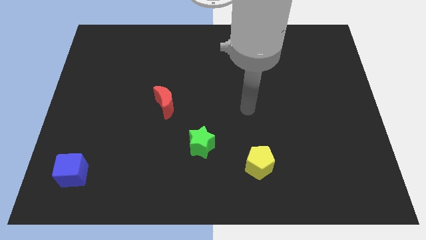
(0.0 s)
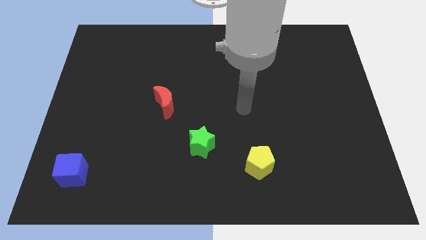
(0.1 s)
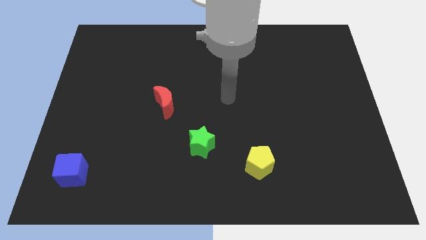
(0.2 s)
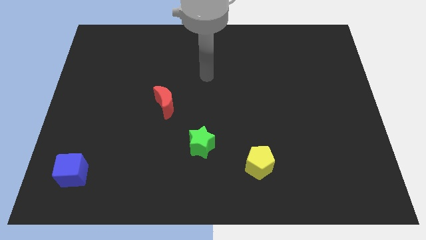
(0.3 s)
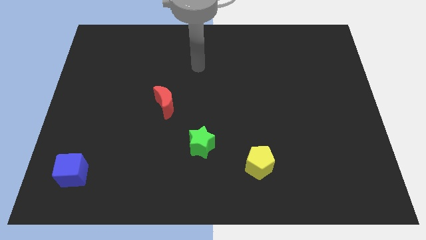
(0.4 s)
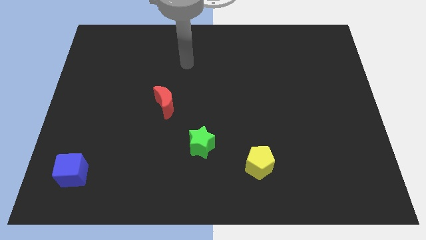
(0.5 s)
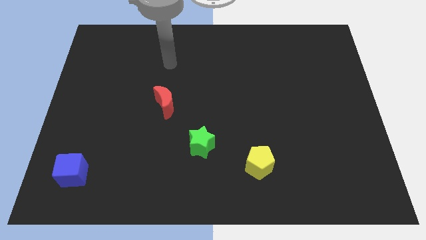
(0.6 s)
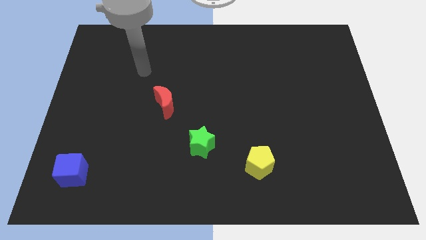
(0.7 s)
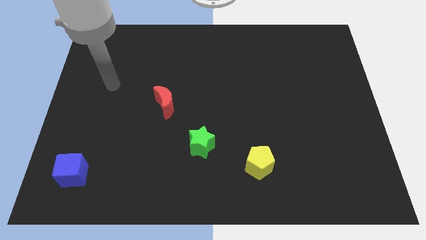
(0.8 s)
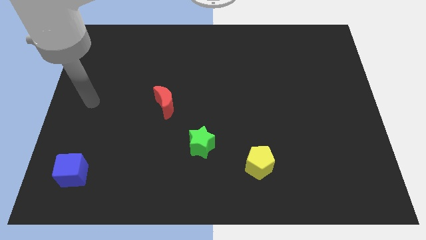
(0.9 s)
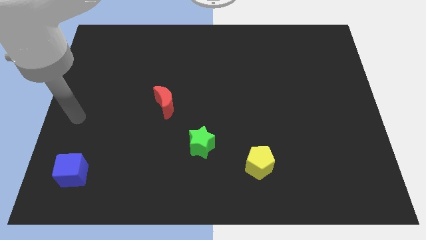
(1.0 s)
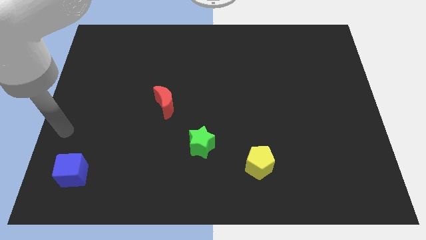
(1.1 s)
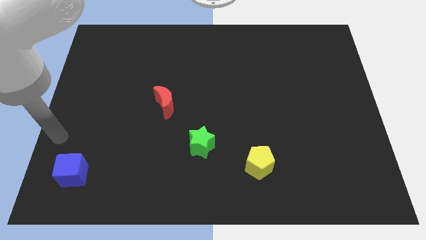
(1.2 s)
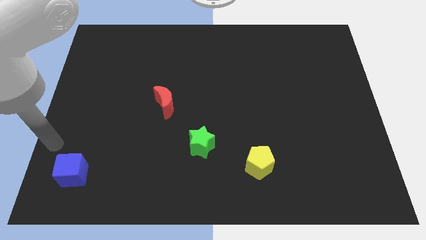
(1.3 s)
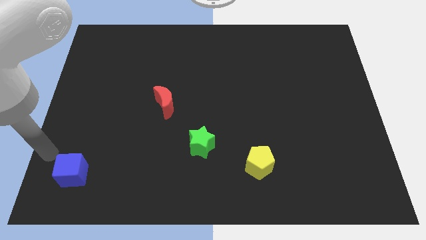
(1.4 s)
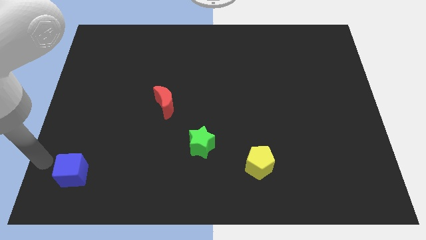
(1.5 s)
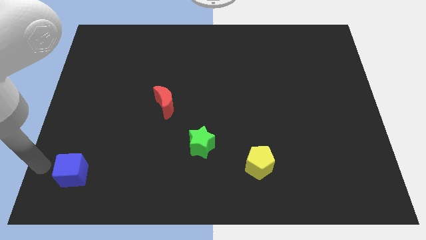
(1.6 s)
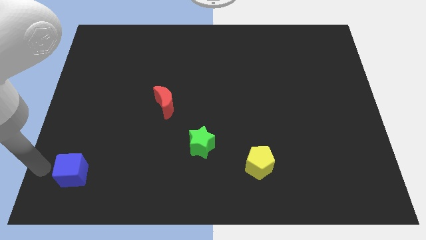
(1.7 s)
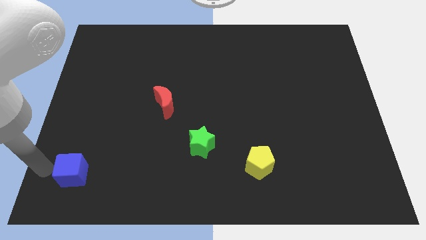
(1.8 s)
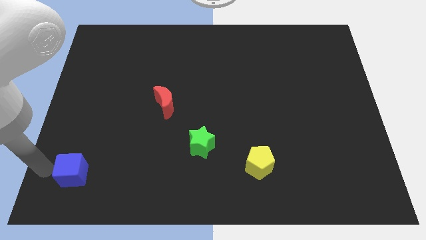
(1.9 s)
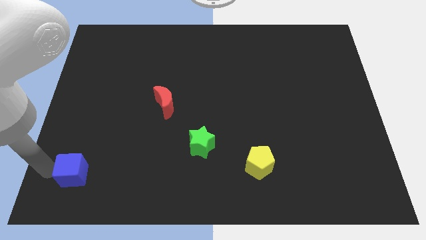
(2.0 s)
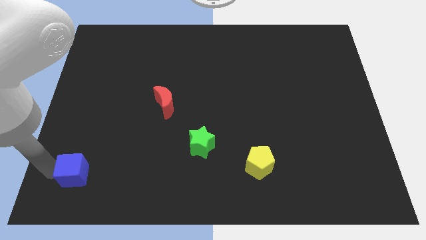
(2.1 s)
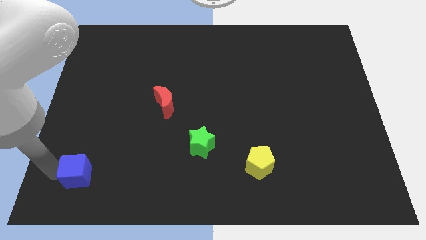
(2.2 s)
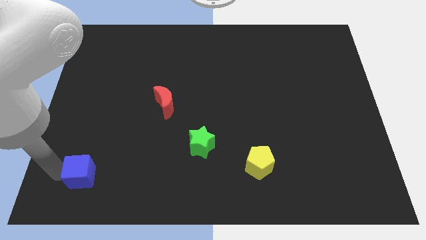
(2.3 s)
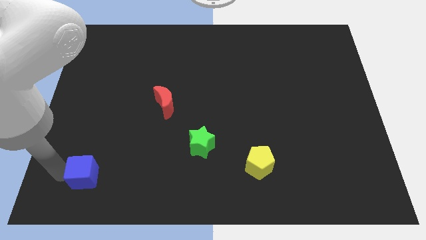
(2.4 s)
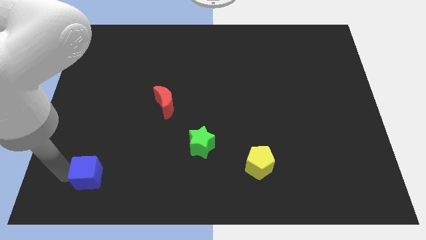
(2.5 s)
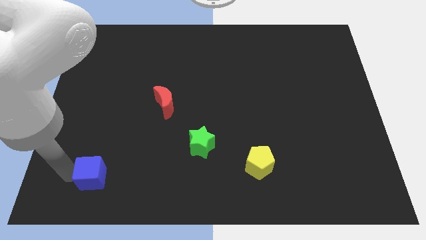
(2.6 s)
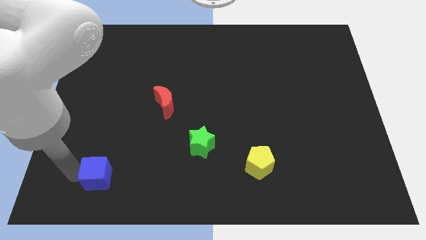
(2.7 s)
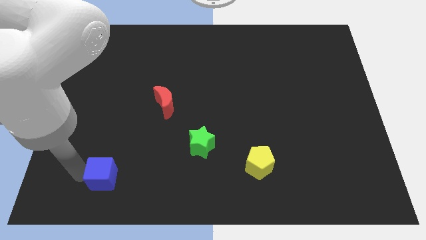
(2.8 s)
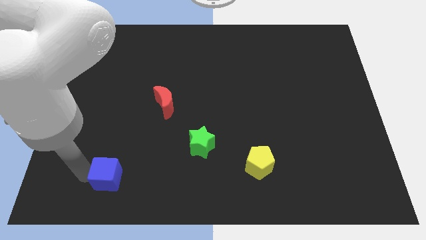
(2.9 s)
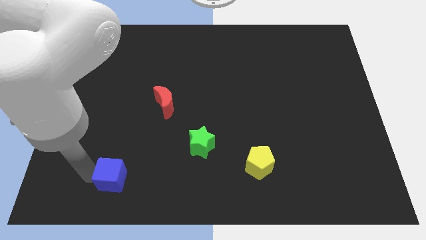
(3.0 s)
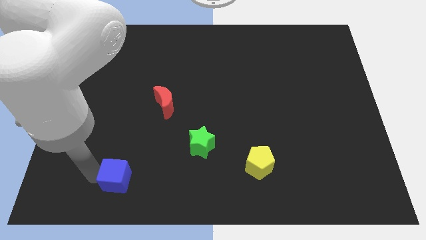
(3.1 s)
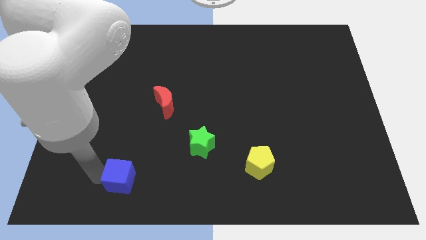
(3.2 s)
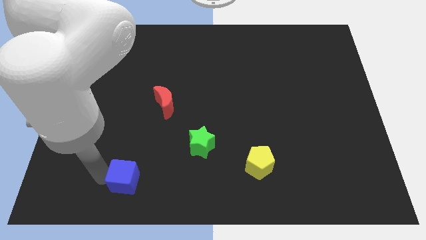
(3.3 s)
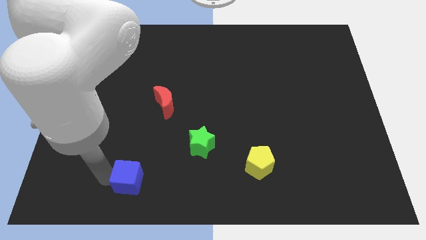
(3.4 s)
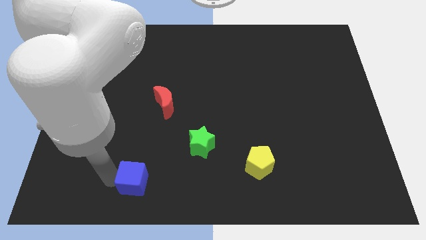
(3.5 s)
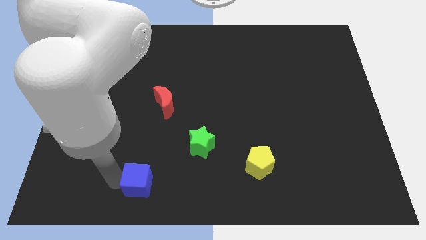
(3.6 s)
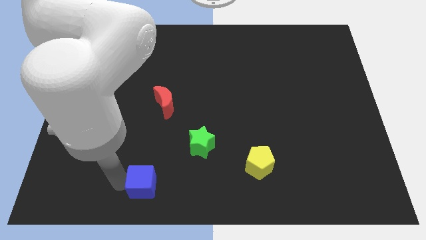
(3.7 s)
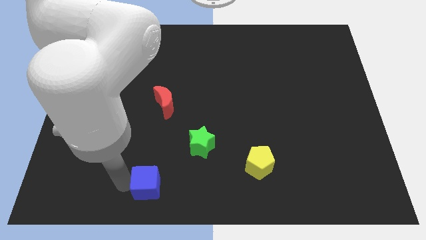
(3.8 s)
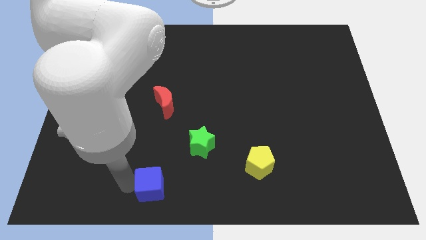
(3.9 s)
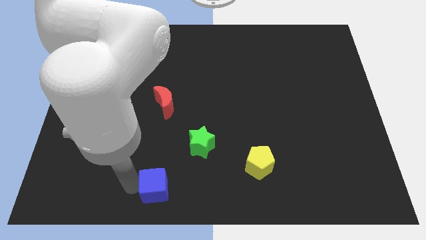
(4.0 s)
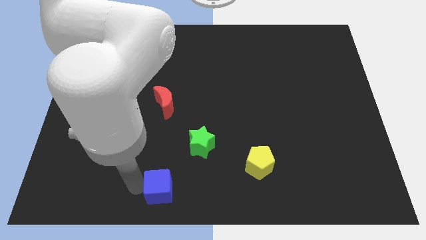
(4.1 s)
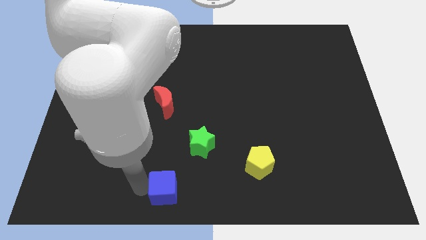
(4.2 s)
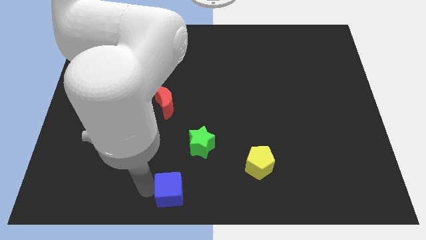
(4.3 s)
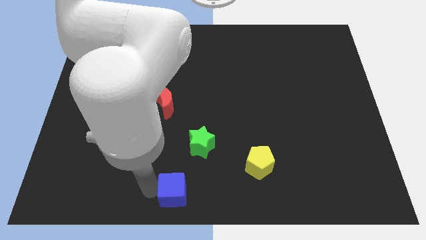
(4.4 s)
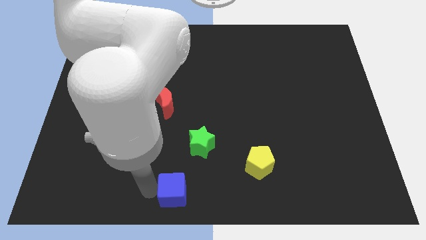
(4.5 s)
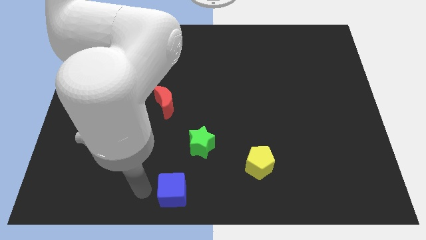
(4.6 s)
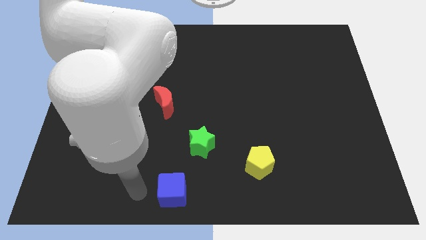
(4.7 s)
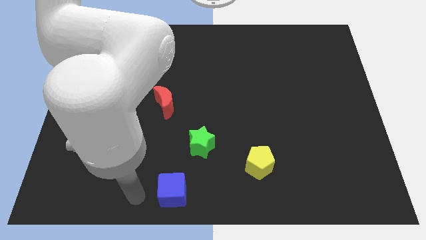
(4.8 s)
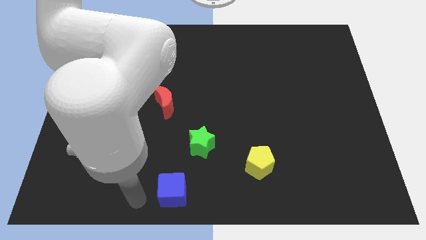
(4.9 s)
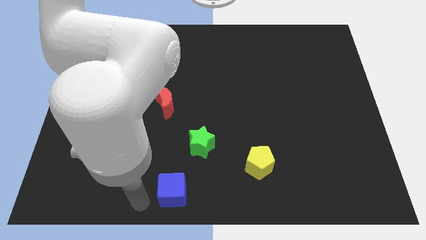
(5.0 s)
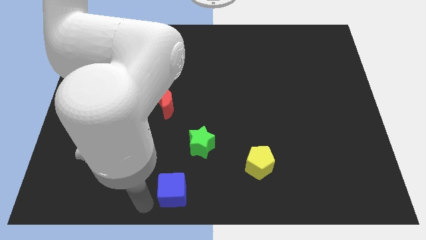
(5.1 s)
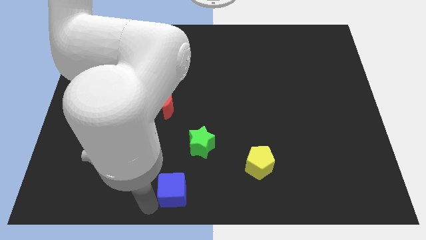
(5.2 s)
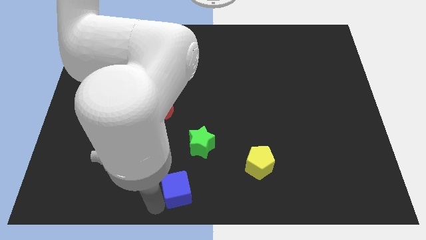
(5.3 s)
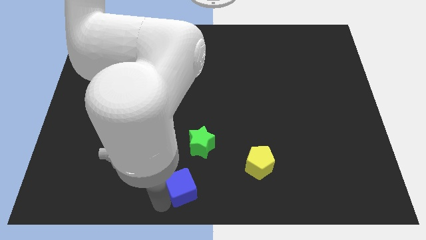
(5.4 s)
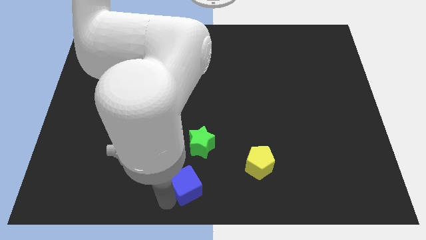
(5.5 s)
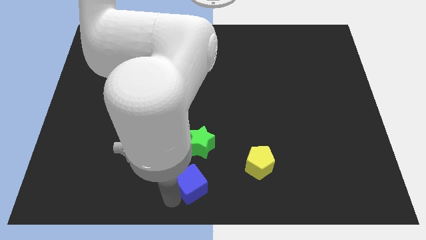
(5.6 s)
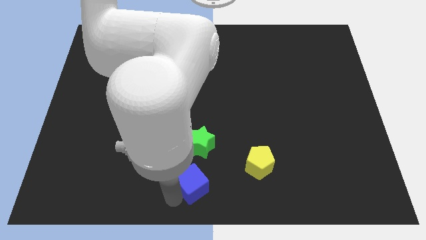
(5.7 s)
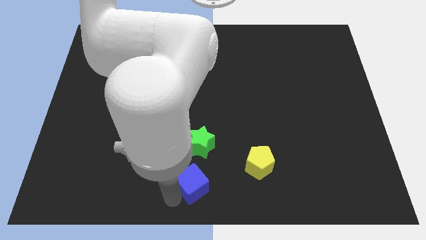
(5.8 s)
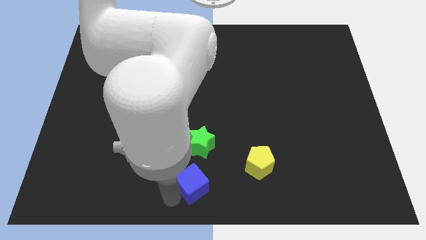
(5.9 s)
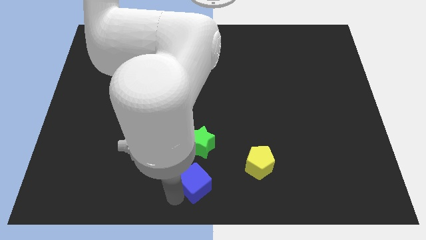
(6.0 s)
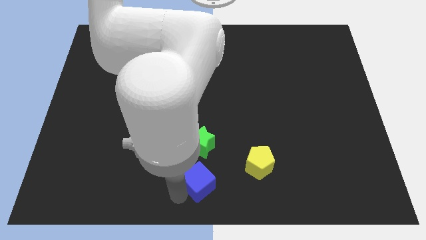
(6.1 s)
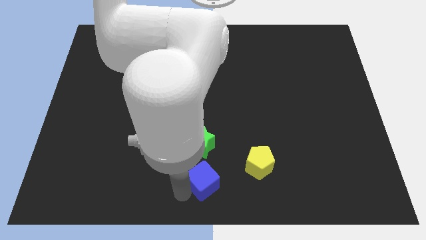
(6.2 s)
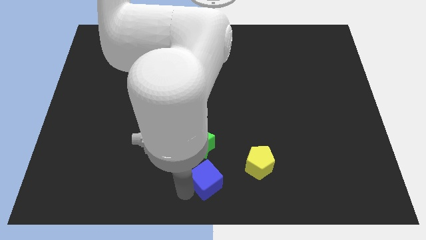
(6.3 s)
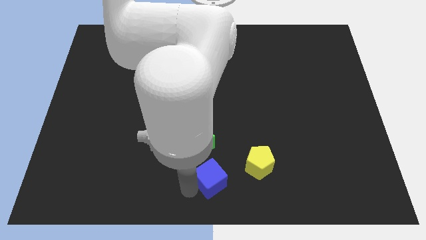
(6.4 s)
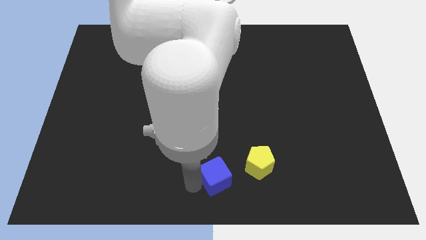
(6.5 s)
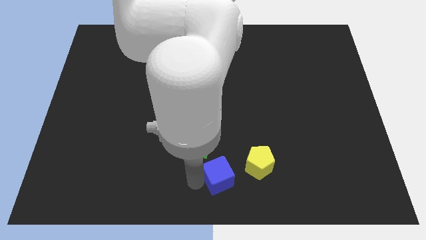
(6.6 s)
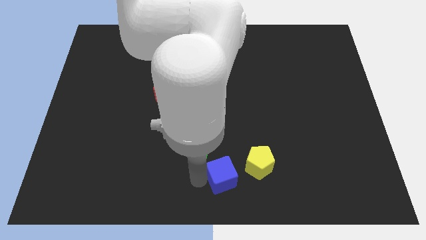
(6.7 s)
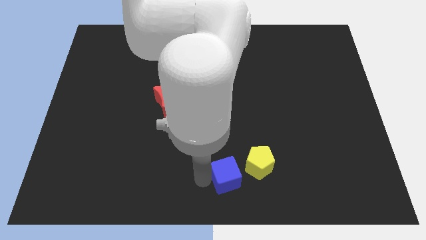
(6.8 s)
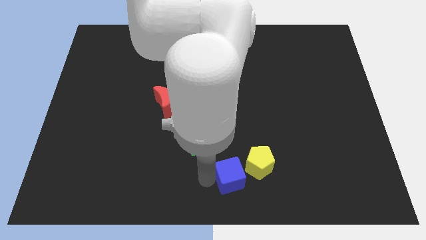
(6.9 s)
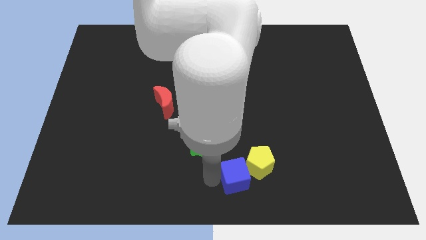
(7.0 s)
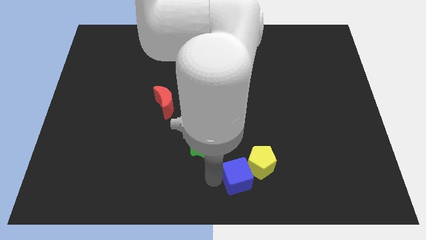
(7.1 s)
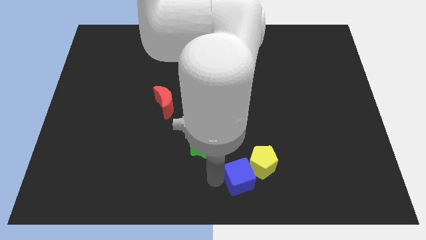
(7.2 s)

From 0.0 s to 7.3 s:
push the blue cube towards the pentagon

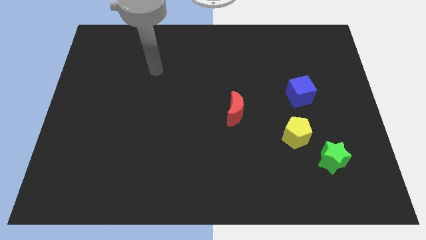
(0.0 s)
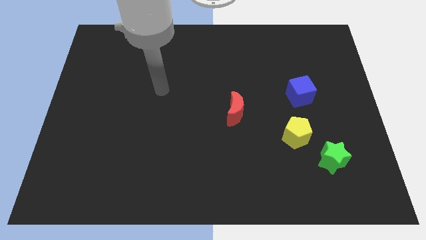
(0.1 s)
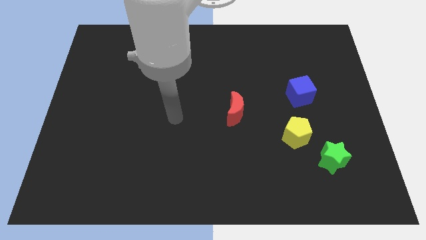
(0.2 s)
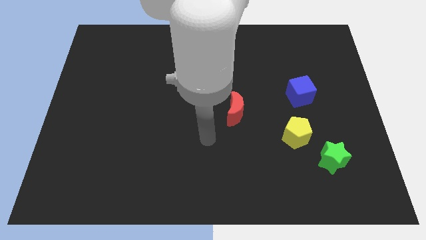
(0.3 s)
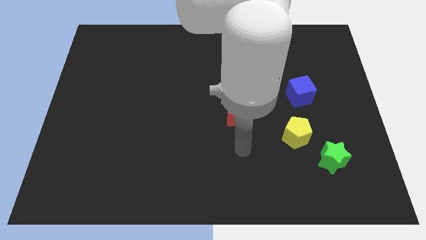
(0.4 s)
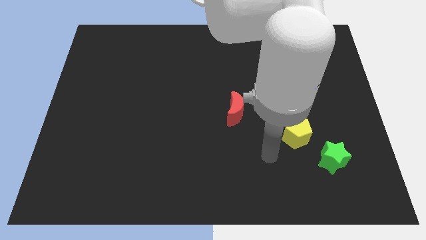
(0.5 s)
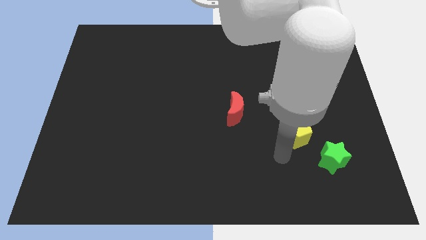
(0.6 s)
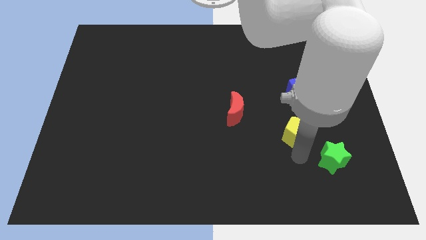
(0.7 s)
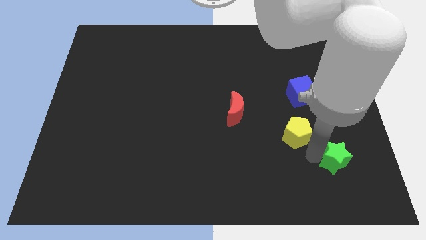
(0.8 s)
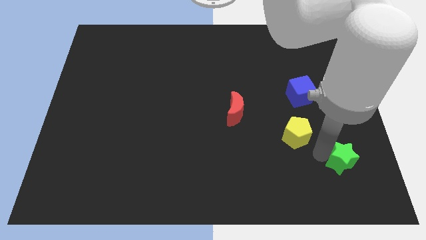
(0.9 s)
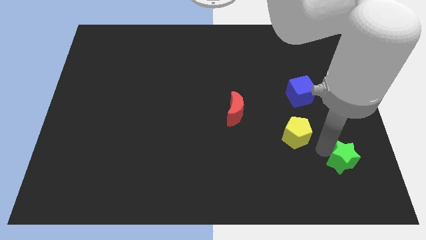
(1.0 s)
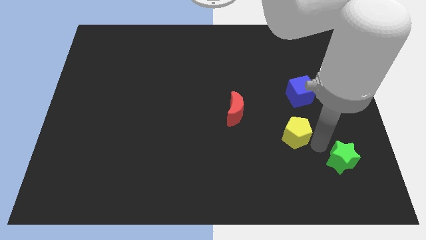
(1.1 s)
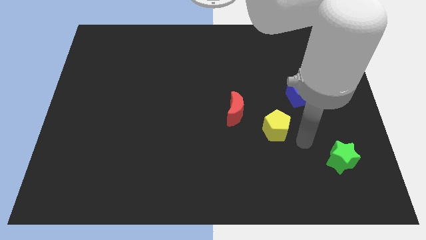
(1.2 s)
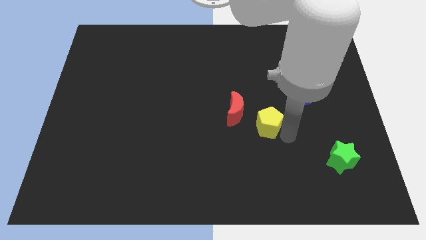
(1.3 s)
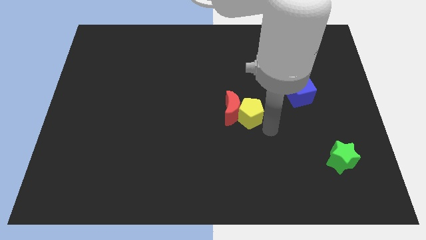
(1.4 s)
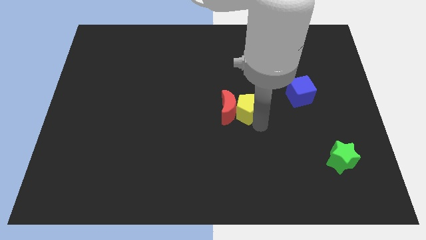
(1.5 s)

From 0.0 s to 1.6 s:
move the yellow pentagon next to the red block
